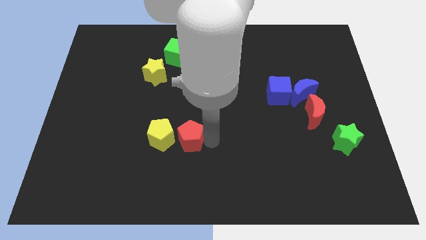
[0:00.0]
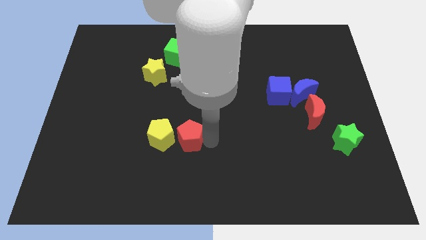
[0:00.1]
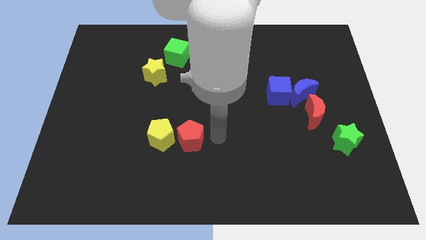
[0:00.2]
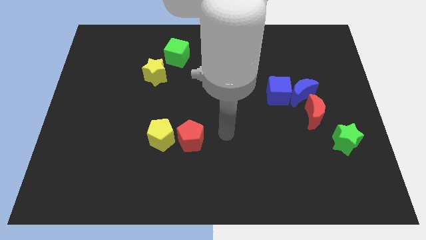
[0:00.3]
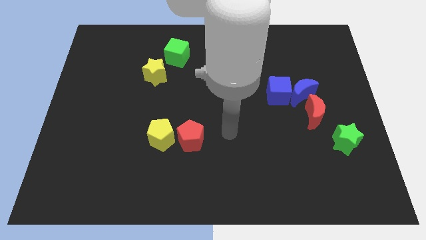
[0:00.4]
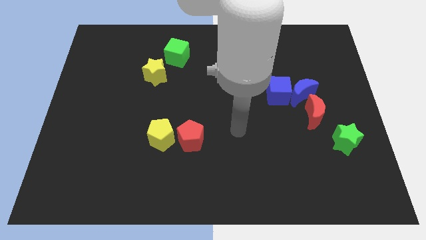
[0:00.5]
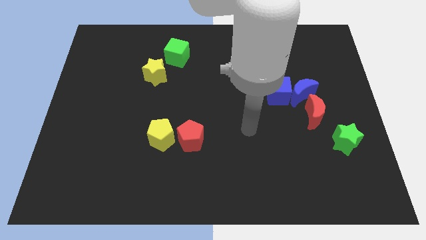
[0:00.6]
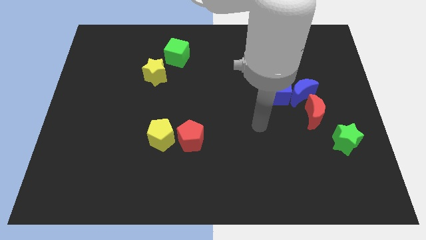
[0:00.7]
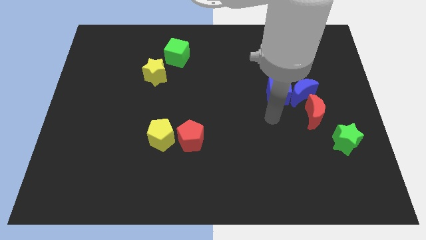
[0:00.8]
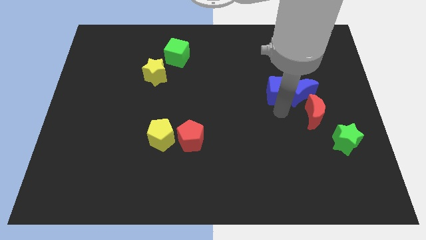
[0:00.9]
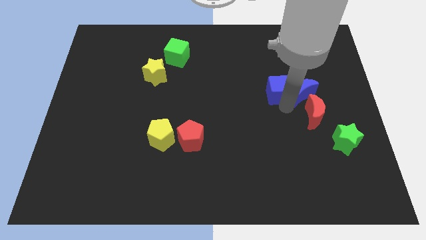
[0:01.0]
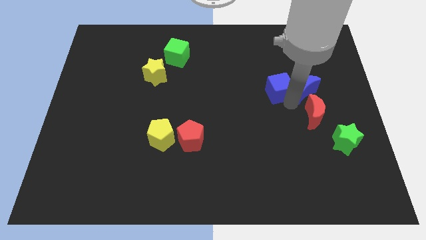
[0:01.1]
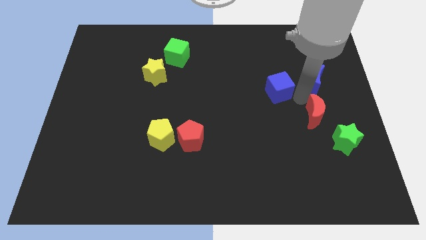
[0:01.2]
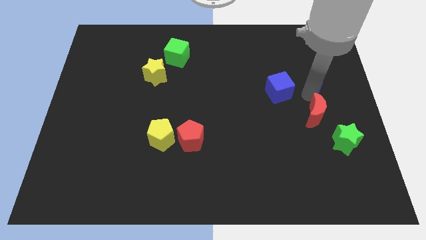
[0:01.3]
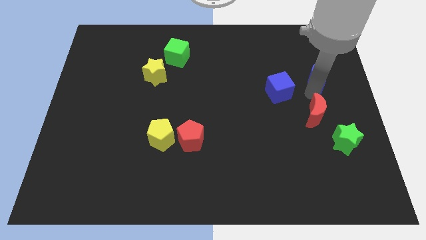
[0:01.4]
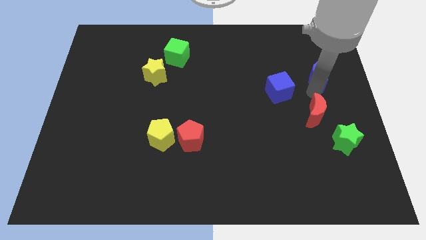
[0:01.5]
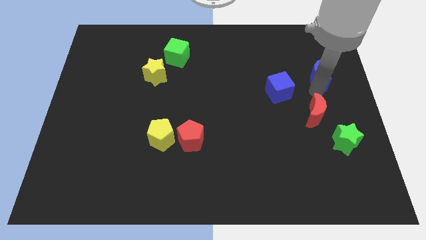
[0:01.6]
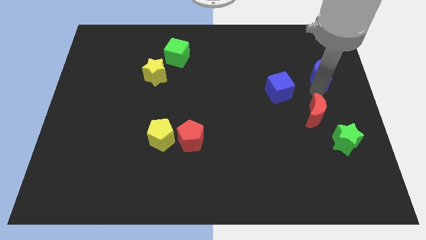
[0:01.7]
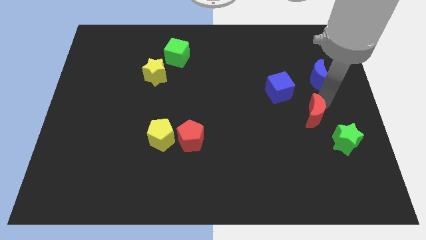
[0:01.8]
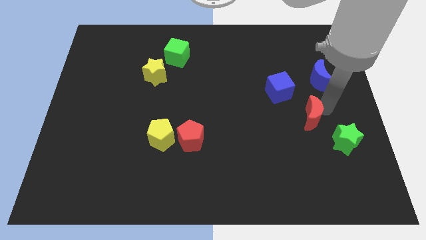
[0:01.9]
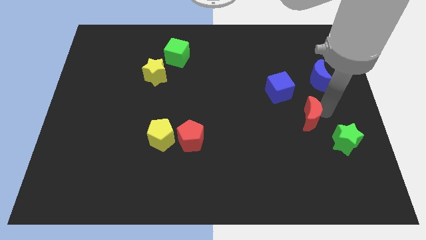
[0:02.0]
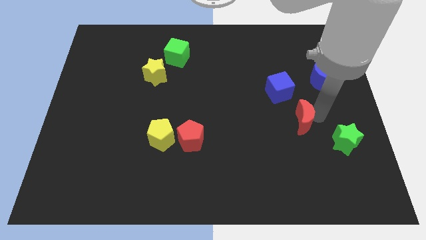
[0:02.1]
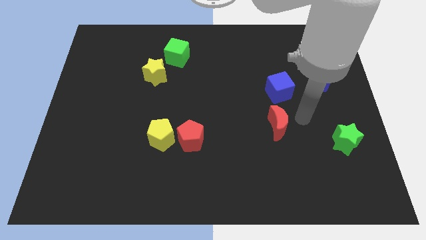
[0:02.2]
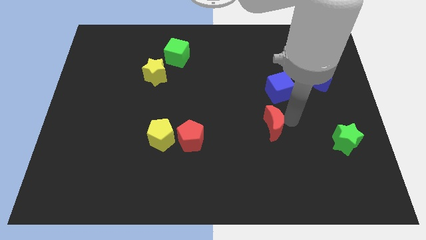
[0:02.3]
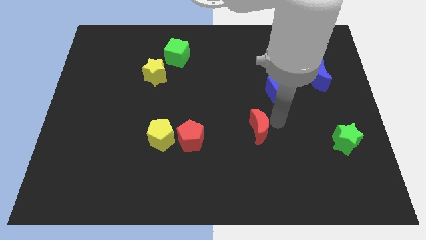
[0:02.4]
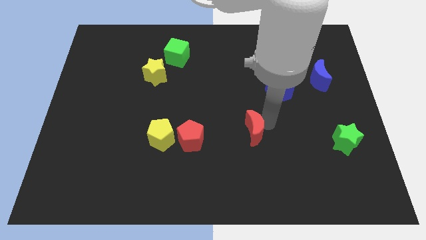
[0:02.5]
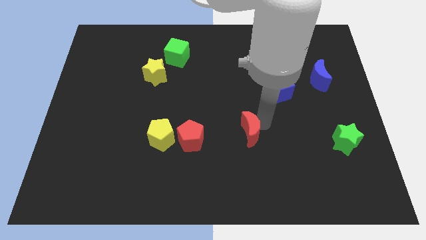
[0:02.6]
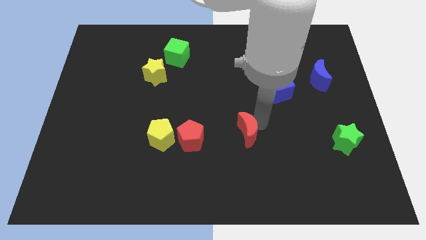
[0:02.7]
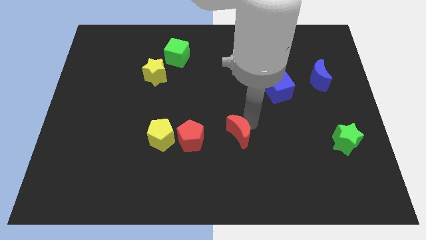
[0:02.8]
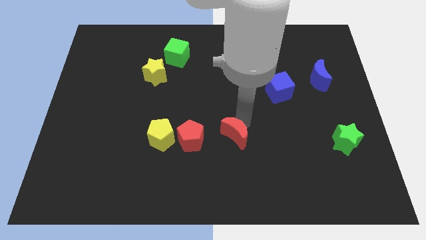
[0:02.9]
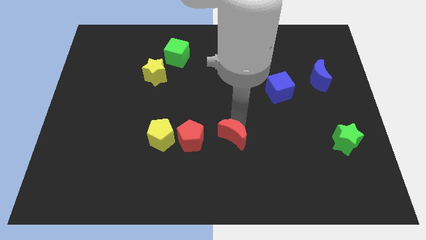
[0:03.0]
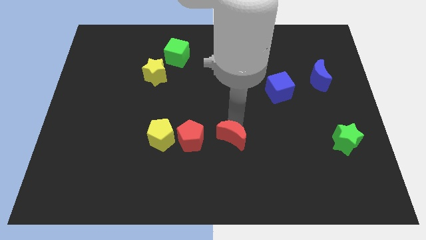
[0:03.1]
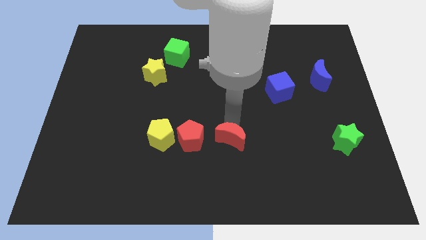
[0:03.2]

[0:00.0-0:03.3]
slide the red moon towards the bottom center of the board

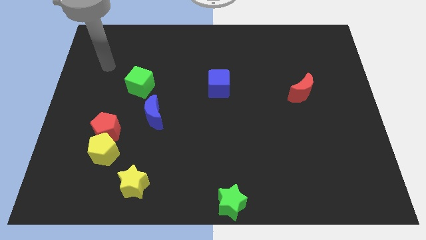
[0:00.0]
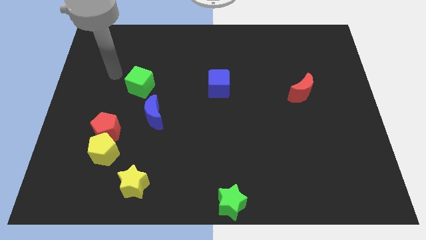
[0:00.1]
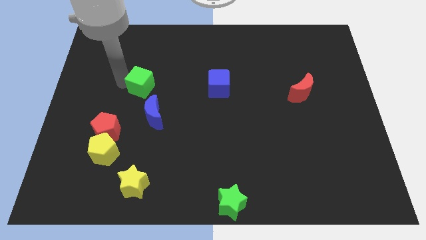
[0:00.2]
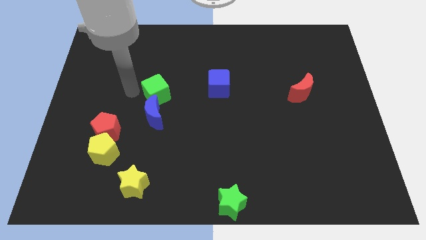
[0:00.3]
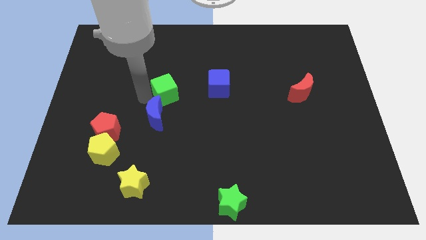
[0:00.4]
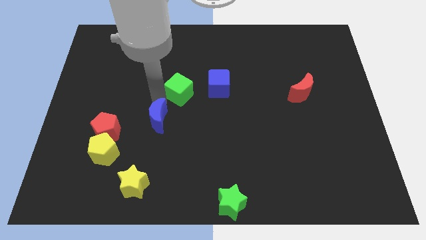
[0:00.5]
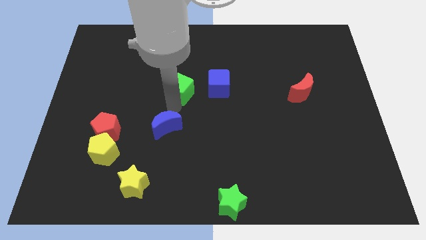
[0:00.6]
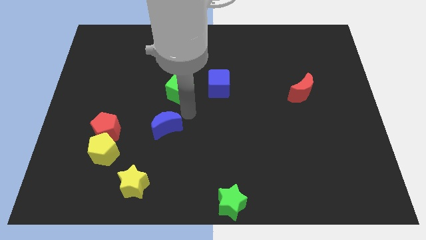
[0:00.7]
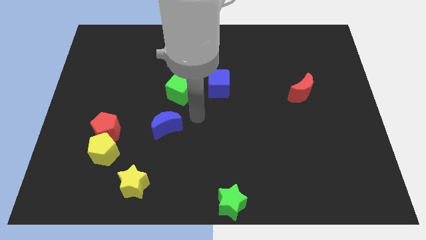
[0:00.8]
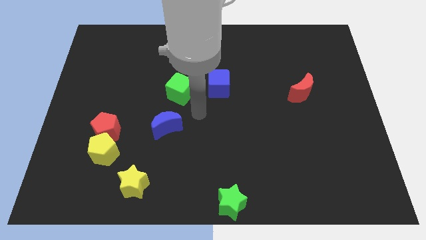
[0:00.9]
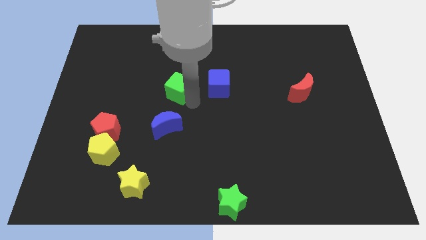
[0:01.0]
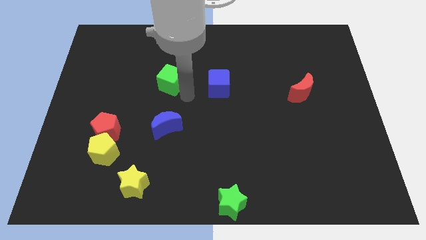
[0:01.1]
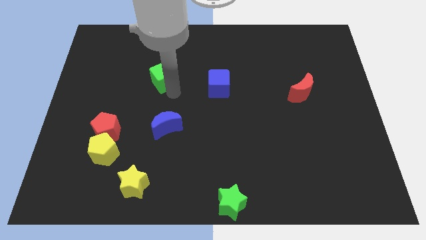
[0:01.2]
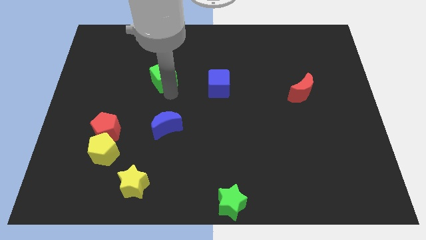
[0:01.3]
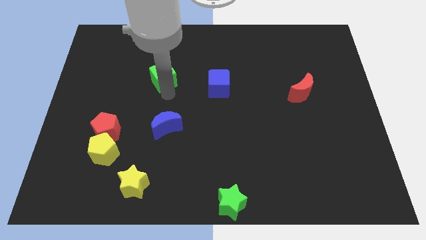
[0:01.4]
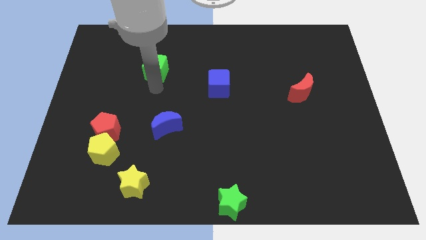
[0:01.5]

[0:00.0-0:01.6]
separate the blue moon and green cube

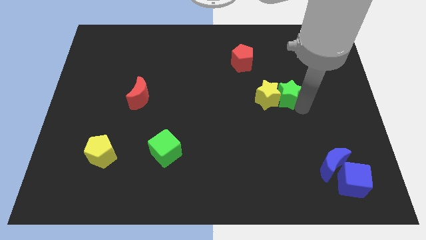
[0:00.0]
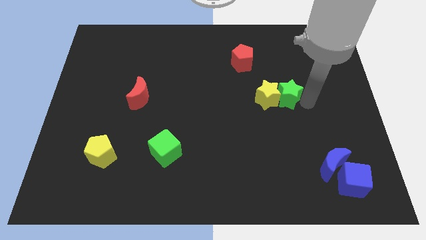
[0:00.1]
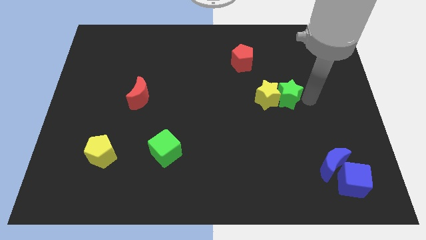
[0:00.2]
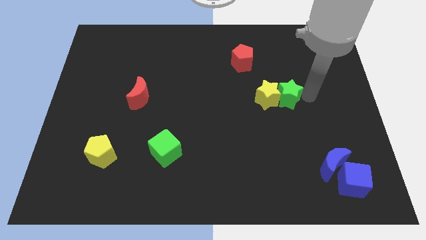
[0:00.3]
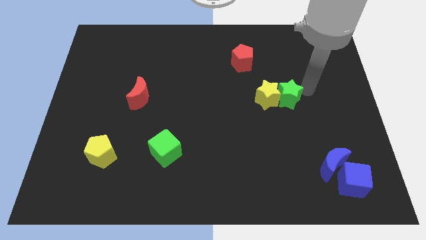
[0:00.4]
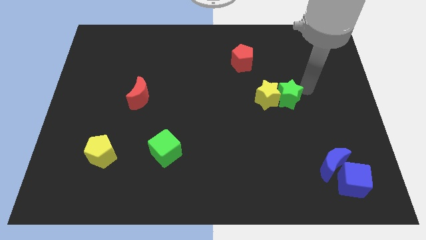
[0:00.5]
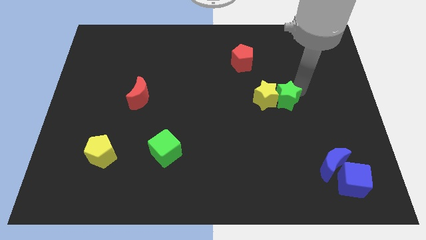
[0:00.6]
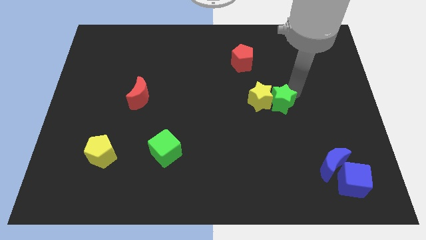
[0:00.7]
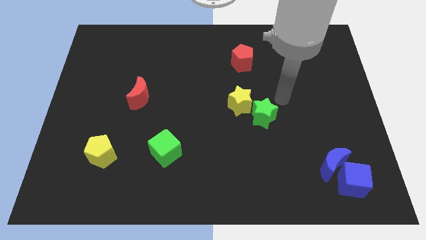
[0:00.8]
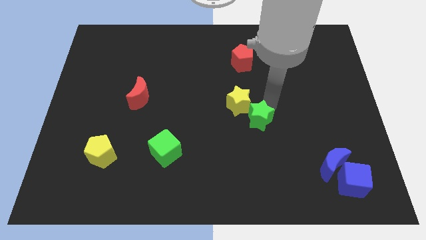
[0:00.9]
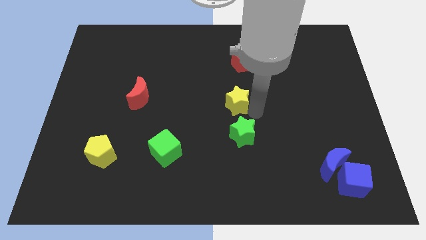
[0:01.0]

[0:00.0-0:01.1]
place the green star vertically below the yellow star

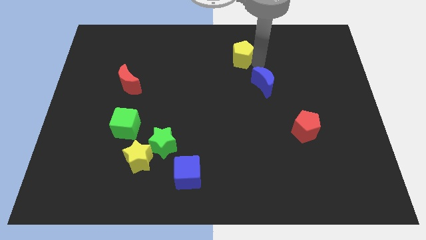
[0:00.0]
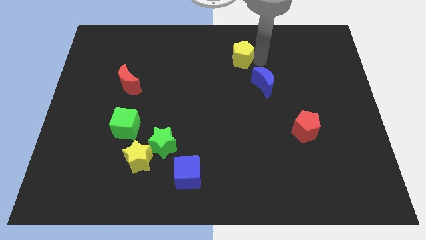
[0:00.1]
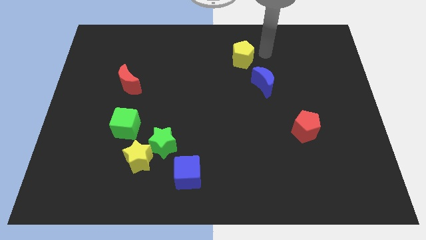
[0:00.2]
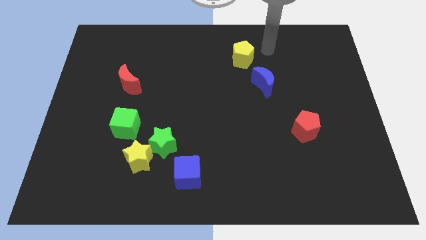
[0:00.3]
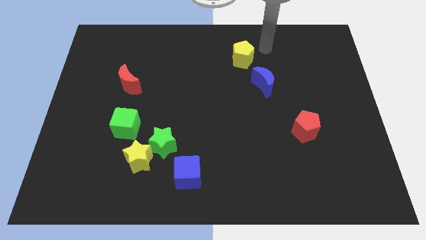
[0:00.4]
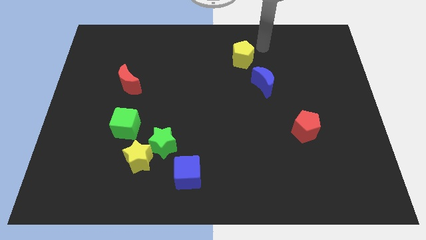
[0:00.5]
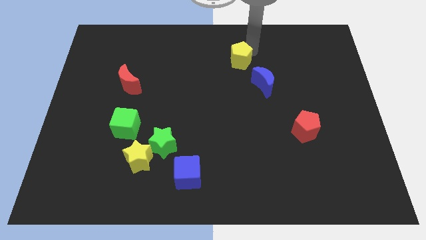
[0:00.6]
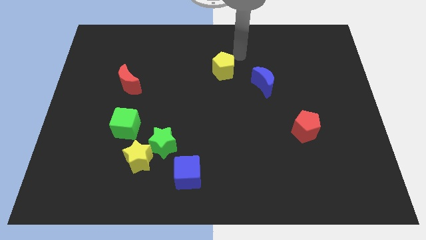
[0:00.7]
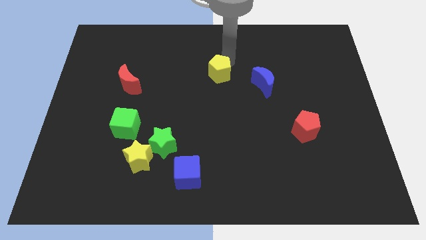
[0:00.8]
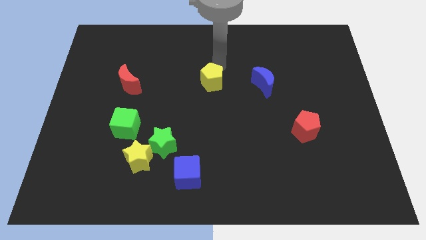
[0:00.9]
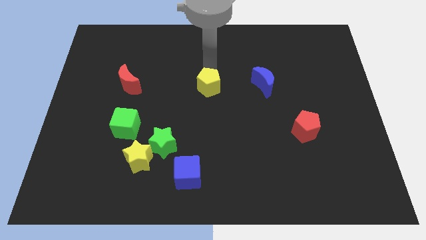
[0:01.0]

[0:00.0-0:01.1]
place the yellow pentagon to the left of the blue moon

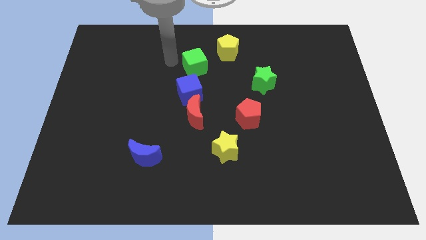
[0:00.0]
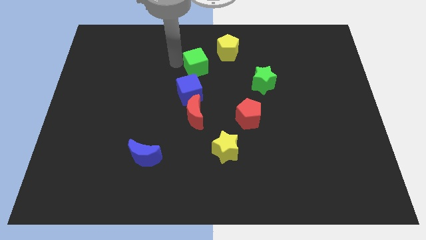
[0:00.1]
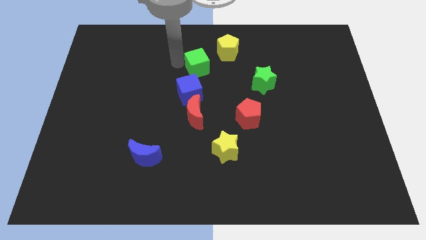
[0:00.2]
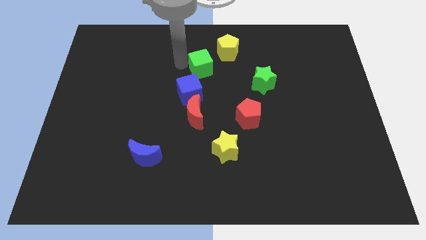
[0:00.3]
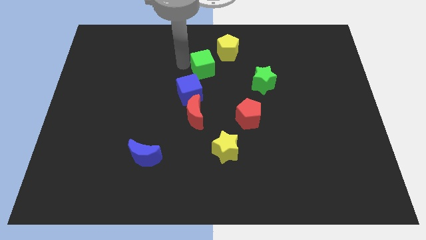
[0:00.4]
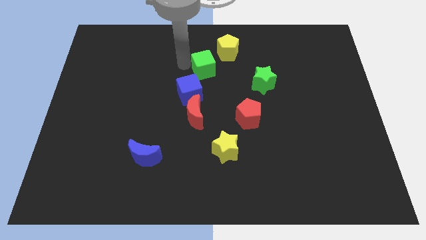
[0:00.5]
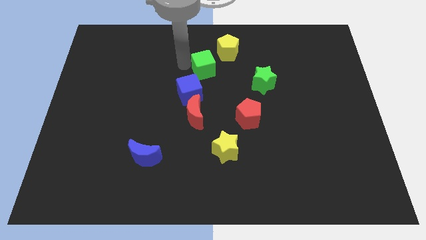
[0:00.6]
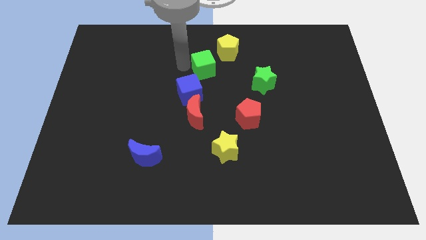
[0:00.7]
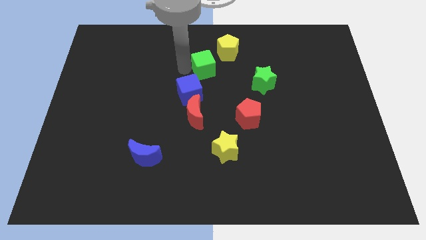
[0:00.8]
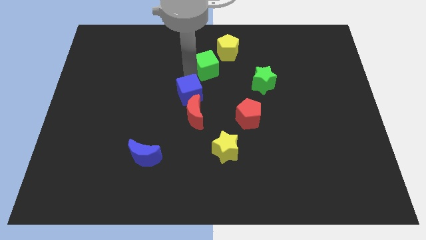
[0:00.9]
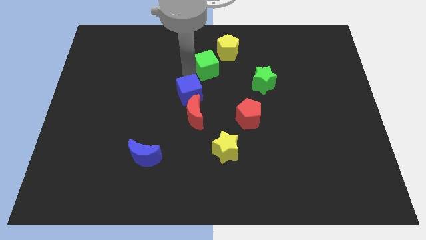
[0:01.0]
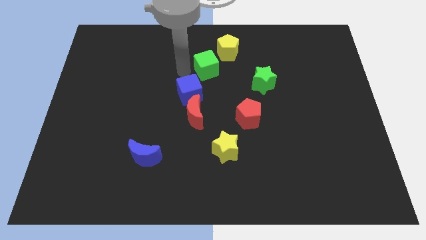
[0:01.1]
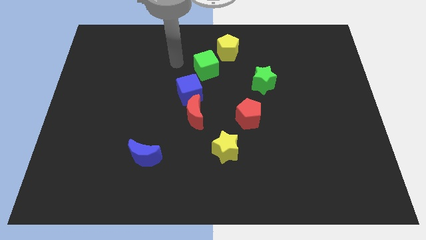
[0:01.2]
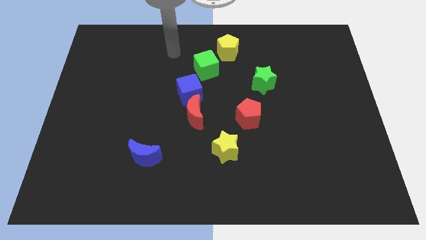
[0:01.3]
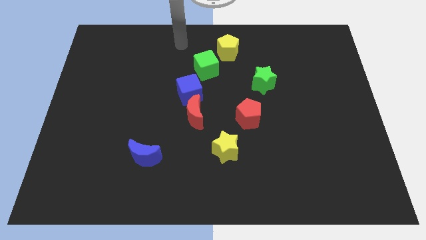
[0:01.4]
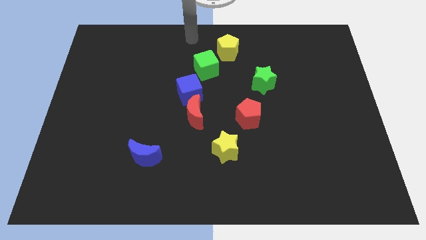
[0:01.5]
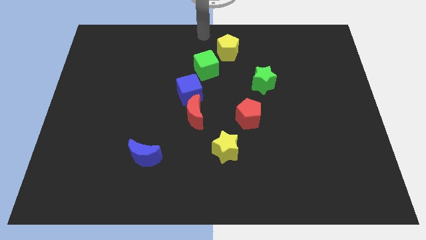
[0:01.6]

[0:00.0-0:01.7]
move the green cube diagonally in between the yellow pentagon and blue cube
